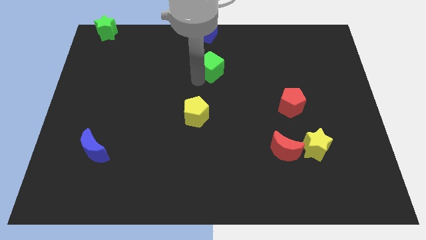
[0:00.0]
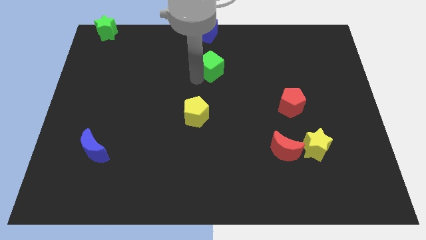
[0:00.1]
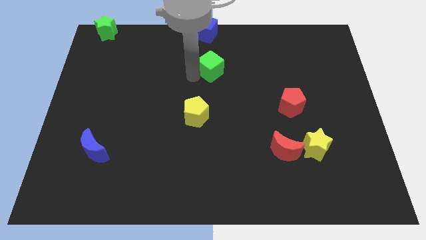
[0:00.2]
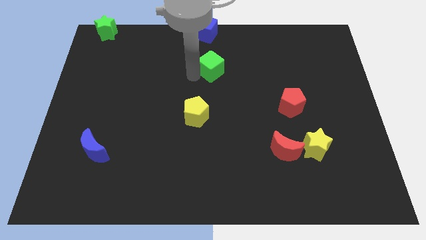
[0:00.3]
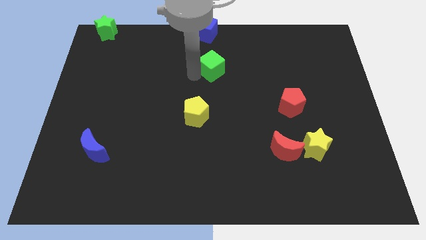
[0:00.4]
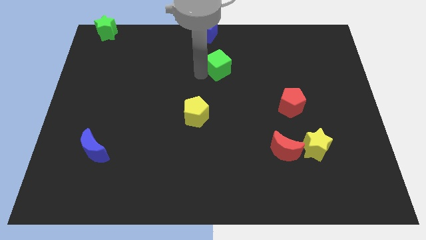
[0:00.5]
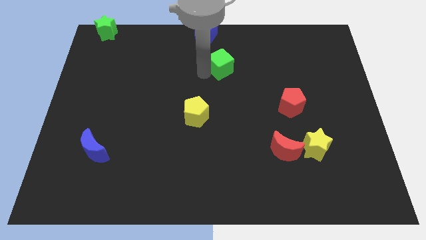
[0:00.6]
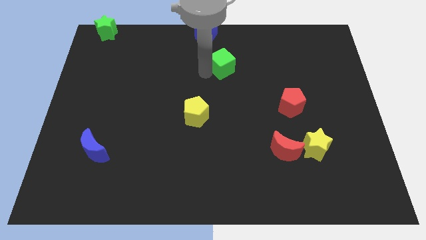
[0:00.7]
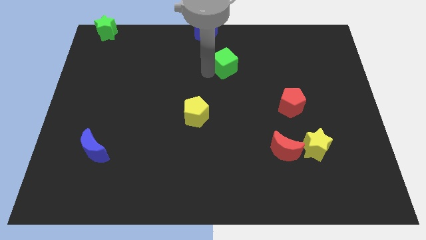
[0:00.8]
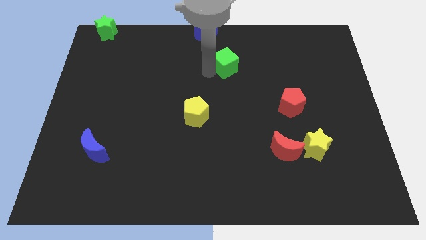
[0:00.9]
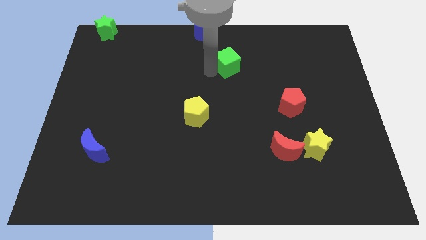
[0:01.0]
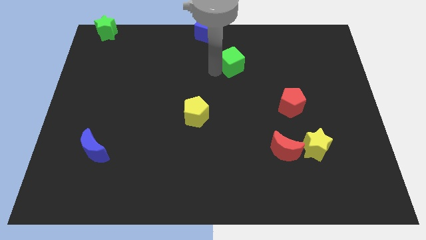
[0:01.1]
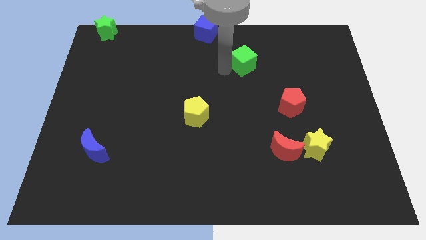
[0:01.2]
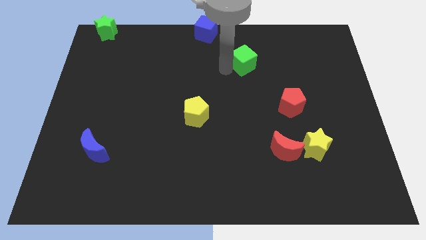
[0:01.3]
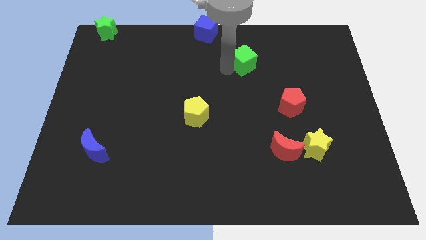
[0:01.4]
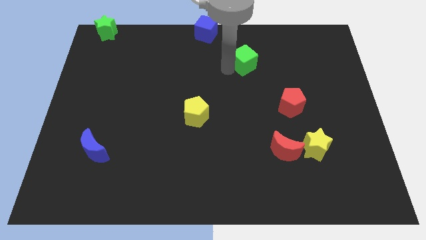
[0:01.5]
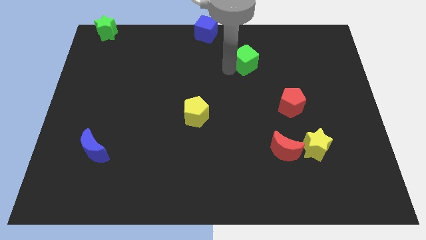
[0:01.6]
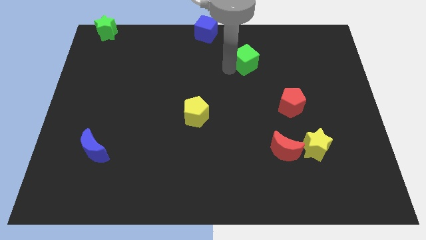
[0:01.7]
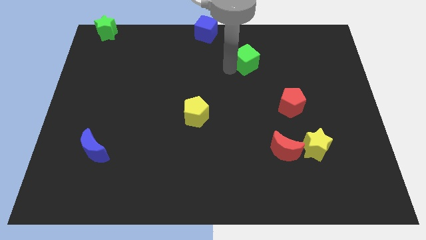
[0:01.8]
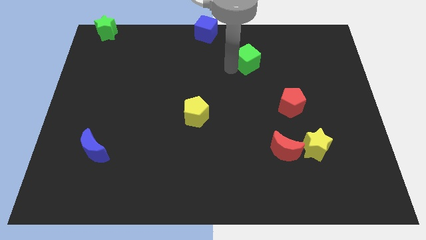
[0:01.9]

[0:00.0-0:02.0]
put the green cube between the blue cube and red pentagon

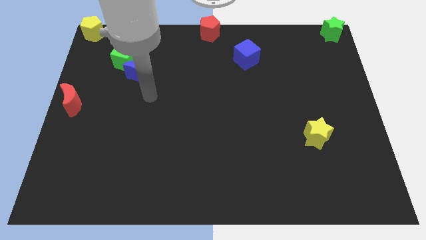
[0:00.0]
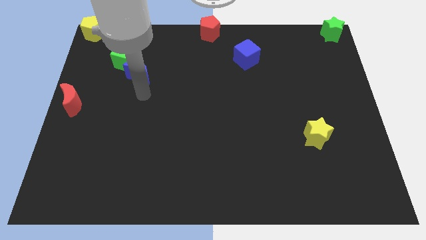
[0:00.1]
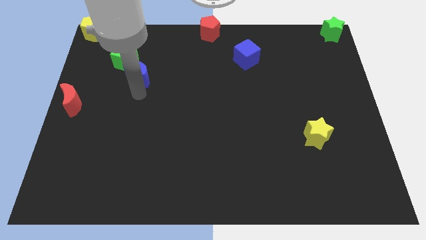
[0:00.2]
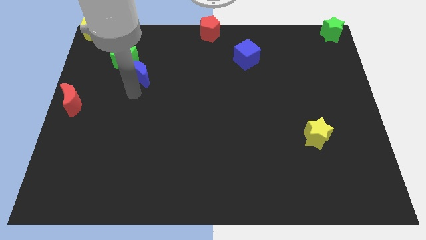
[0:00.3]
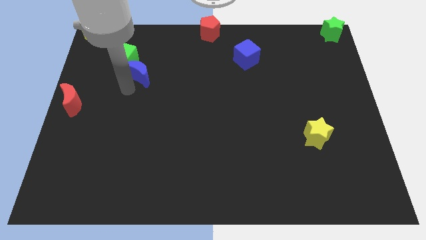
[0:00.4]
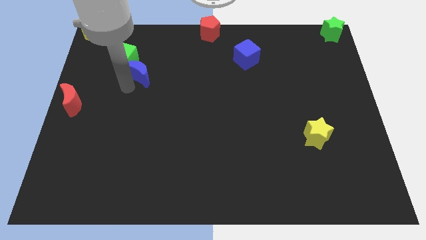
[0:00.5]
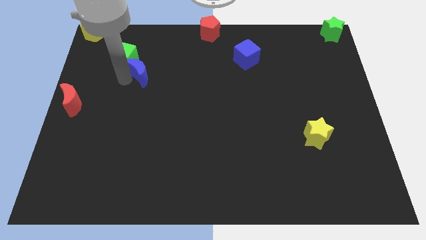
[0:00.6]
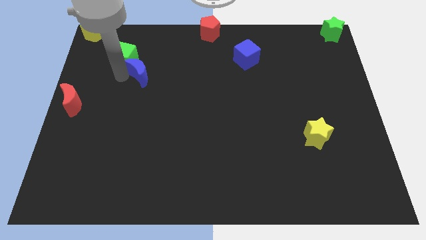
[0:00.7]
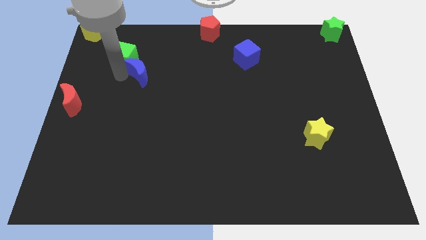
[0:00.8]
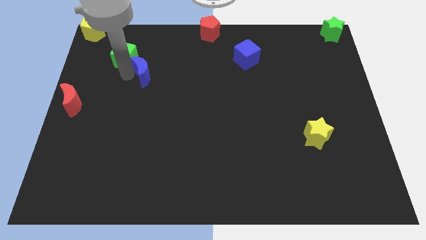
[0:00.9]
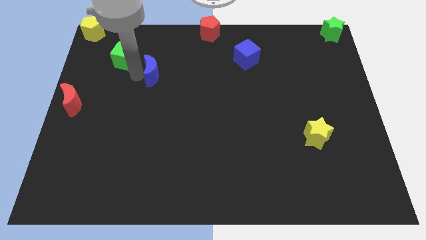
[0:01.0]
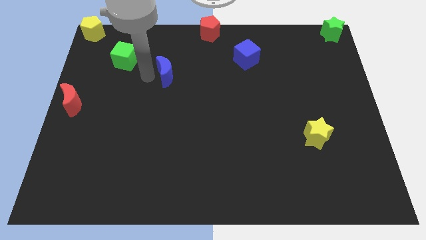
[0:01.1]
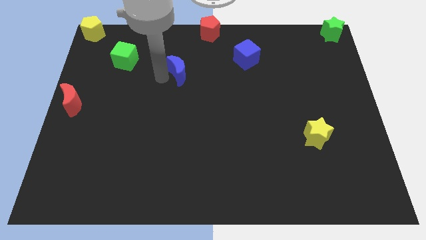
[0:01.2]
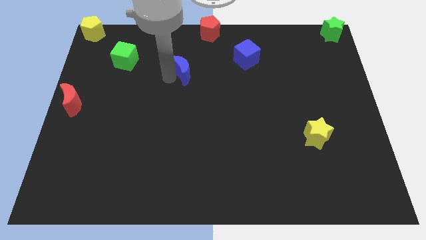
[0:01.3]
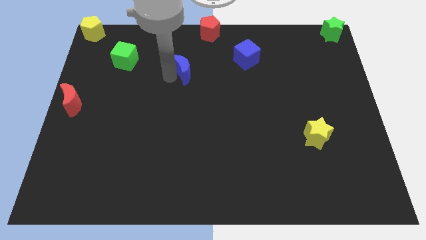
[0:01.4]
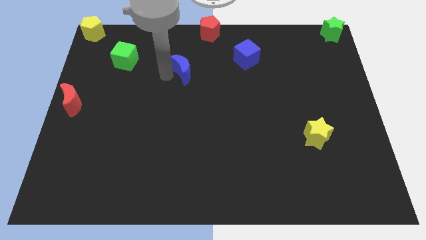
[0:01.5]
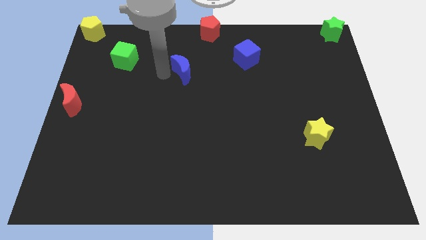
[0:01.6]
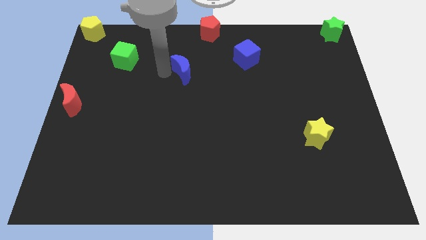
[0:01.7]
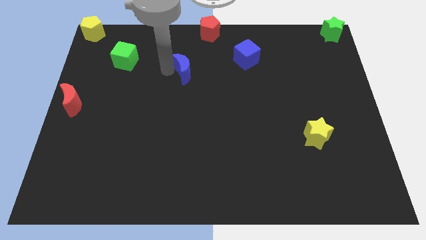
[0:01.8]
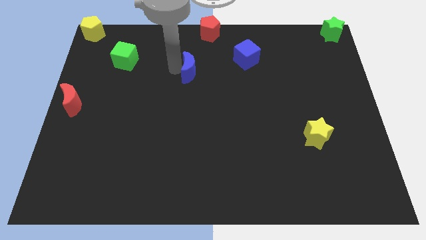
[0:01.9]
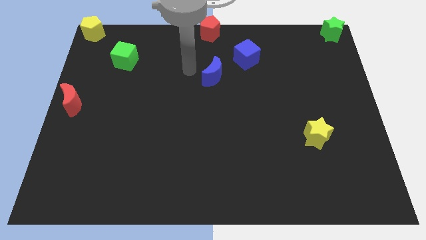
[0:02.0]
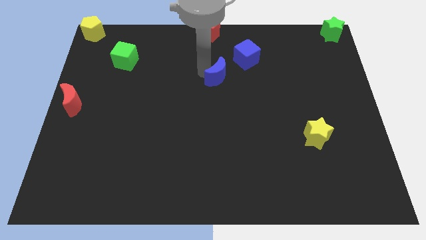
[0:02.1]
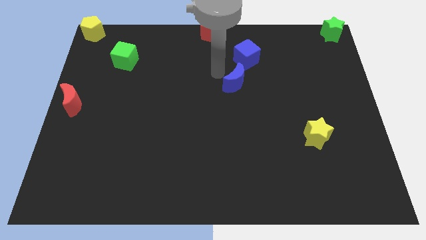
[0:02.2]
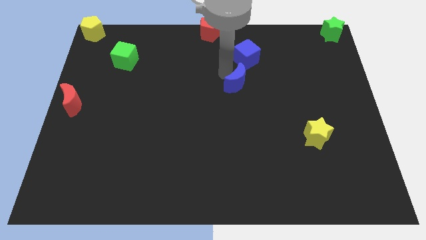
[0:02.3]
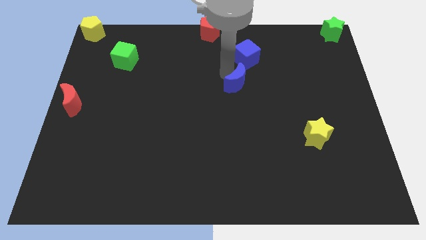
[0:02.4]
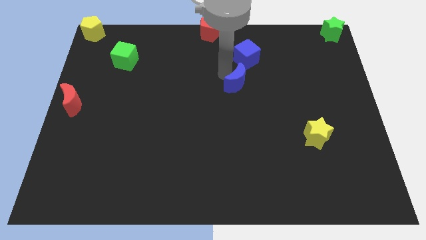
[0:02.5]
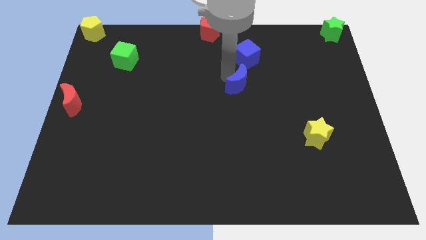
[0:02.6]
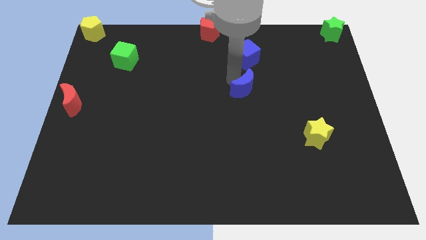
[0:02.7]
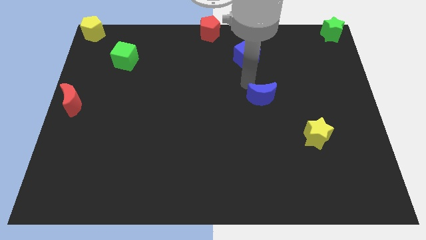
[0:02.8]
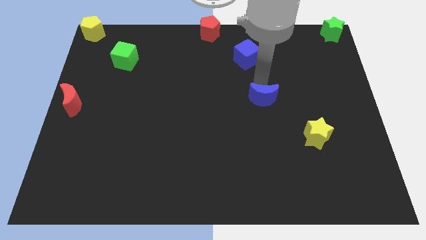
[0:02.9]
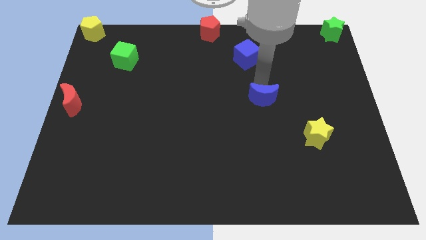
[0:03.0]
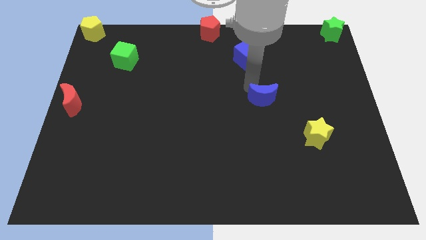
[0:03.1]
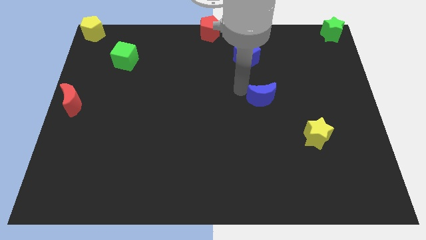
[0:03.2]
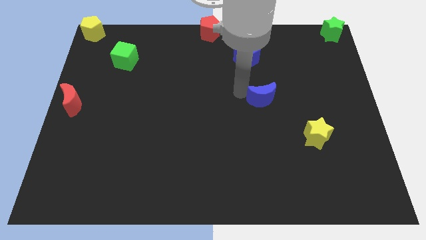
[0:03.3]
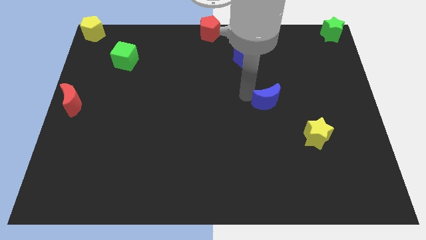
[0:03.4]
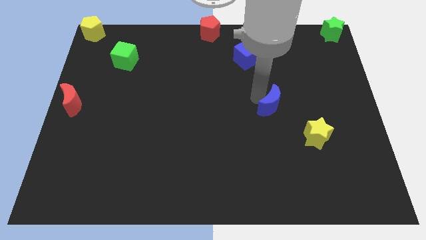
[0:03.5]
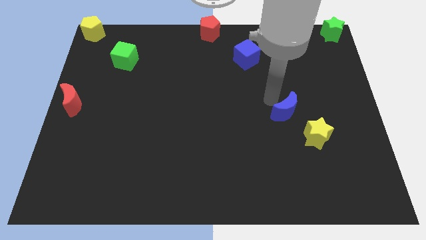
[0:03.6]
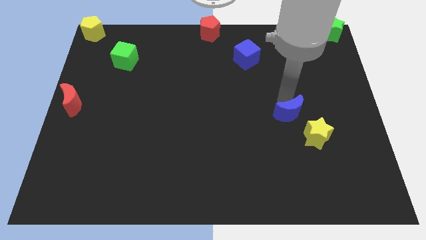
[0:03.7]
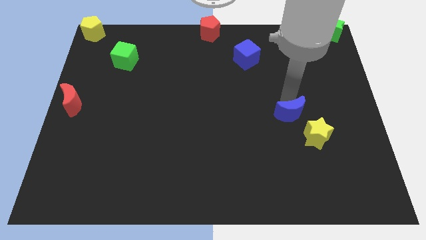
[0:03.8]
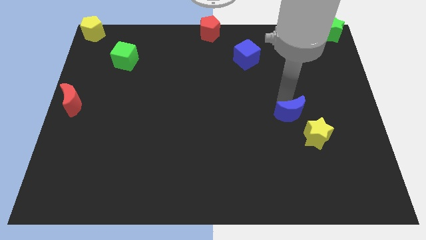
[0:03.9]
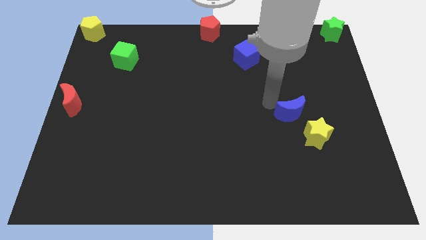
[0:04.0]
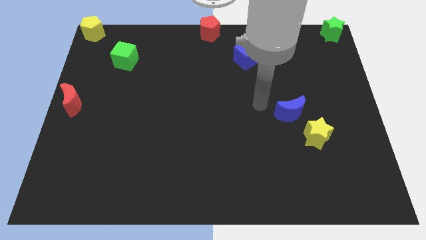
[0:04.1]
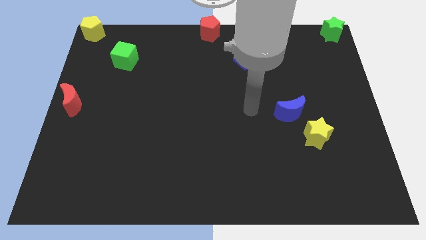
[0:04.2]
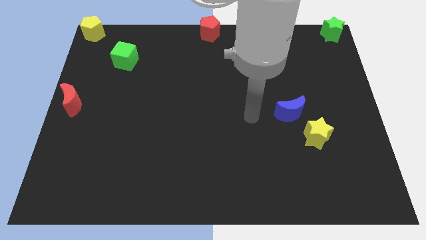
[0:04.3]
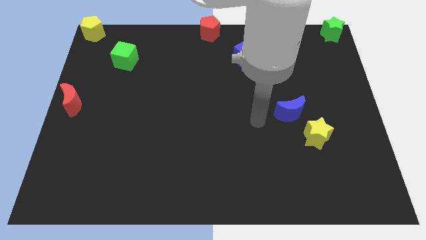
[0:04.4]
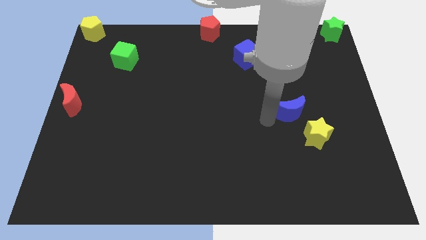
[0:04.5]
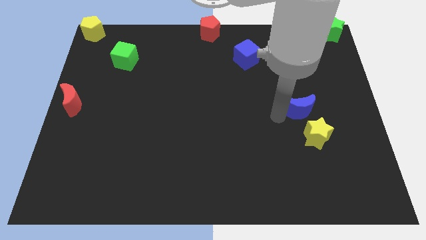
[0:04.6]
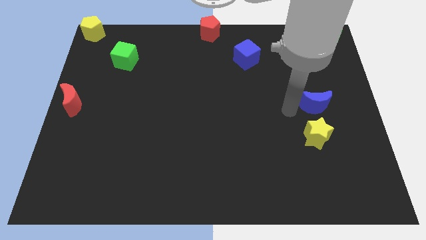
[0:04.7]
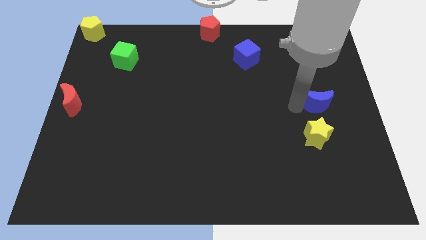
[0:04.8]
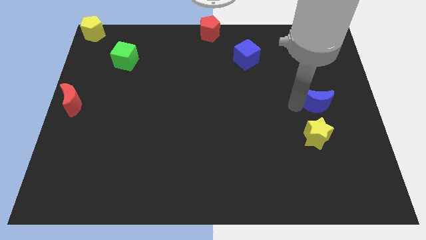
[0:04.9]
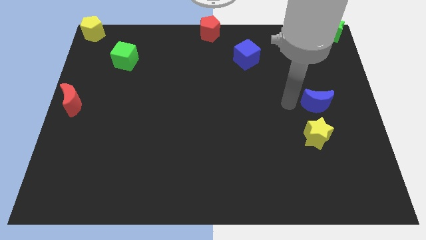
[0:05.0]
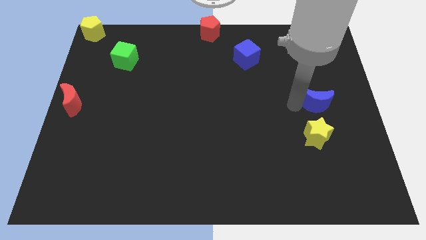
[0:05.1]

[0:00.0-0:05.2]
move the blue crescent at the top side of the yellow star

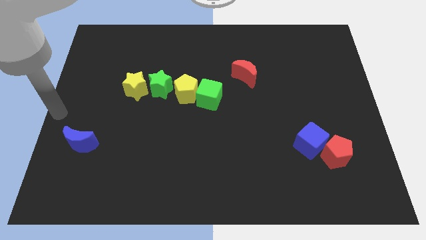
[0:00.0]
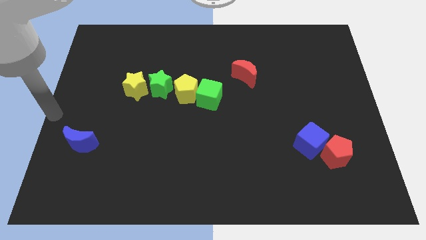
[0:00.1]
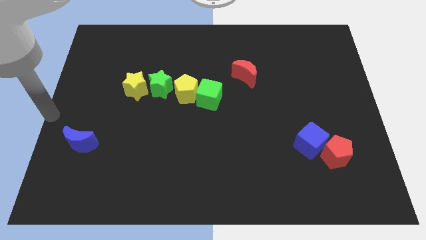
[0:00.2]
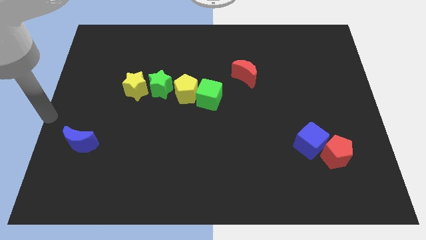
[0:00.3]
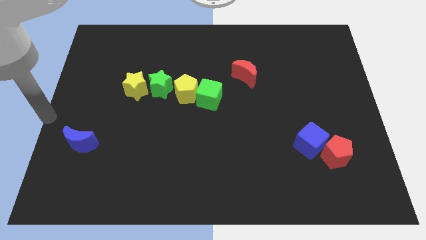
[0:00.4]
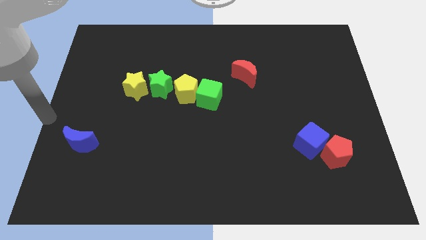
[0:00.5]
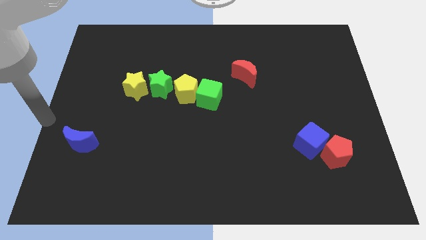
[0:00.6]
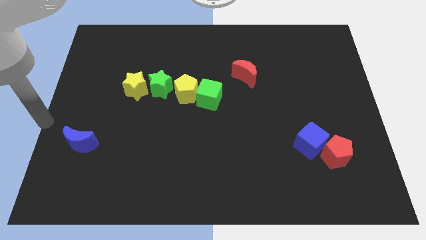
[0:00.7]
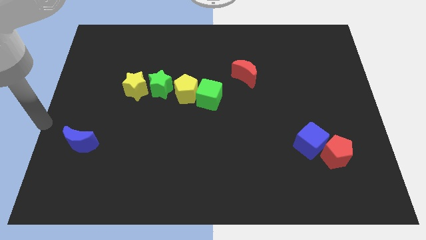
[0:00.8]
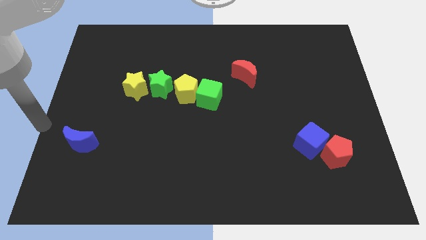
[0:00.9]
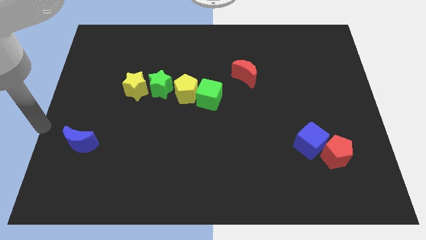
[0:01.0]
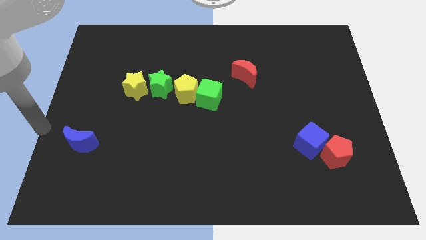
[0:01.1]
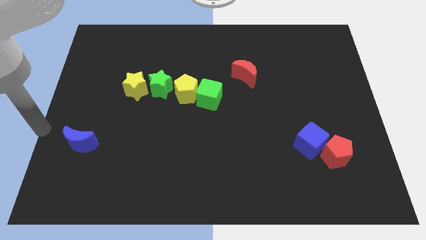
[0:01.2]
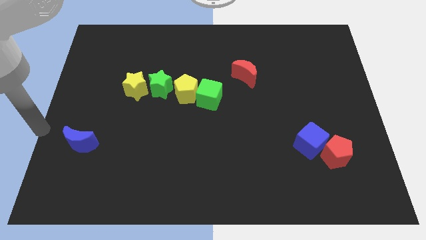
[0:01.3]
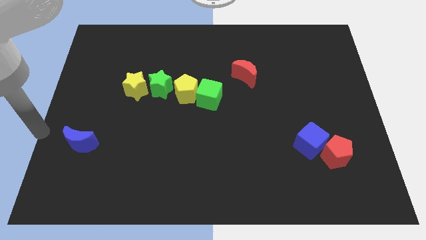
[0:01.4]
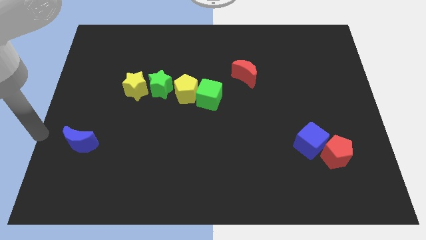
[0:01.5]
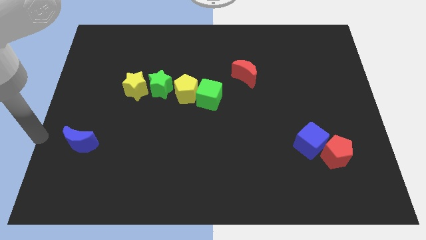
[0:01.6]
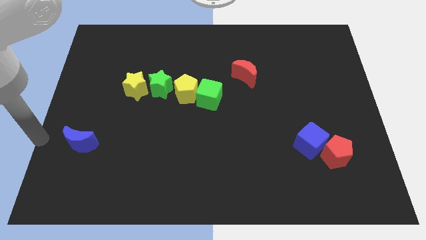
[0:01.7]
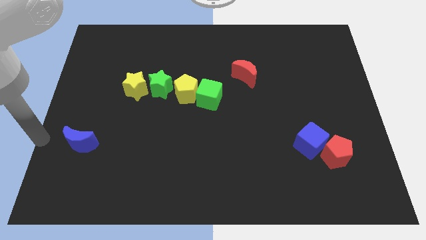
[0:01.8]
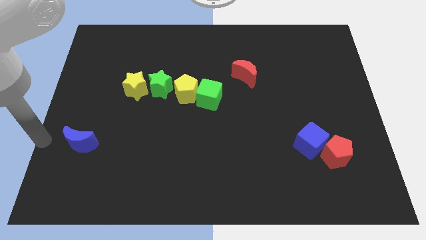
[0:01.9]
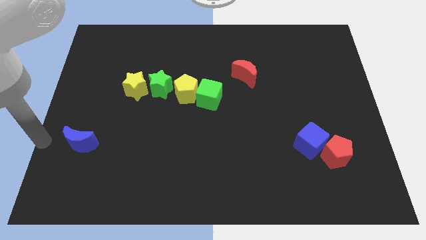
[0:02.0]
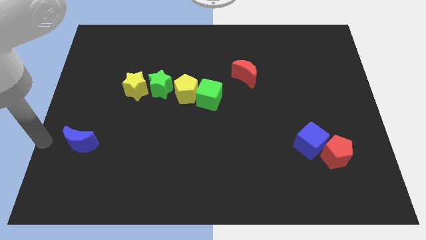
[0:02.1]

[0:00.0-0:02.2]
point your arm at the left side of the blue crescent
